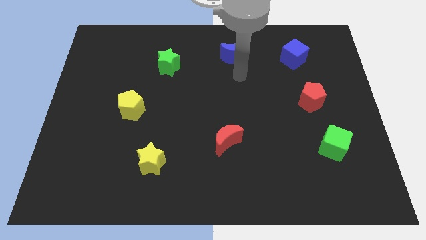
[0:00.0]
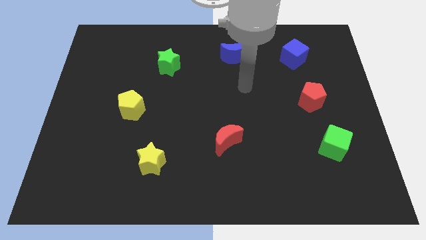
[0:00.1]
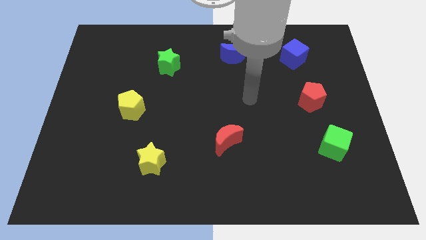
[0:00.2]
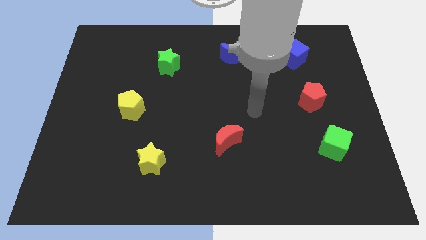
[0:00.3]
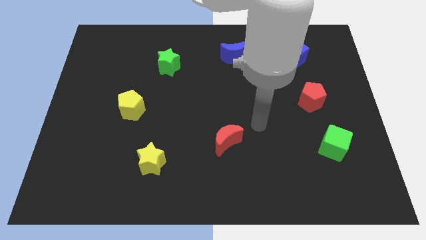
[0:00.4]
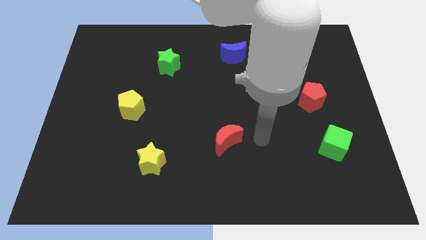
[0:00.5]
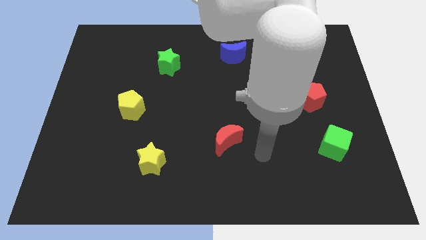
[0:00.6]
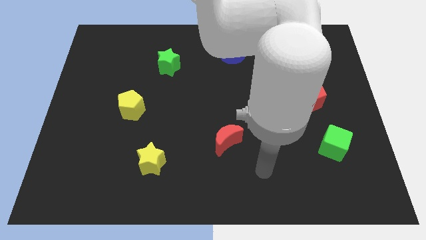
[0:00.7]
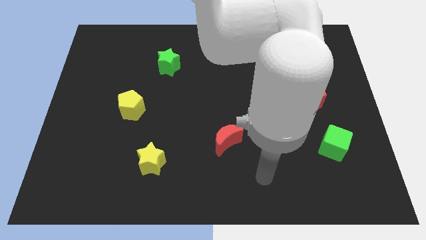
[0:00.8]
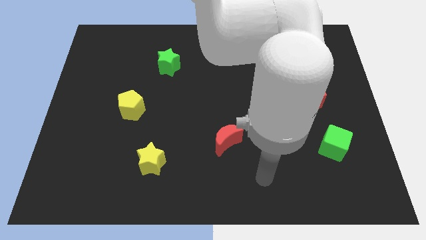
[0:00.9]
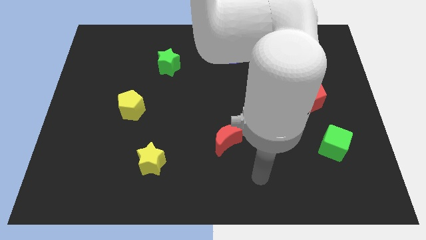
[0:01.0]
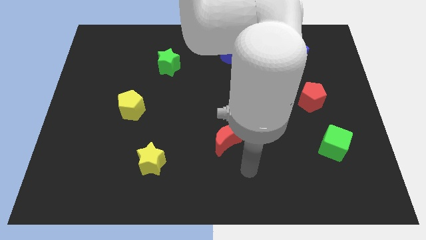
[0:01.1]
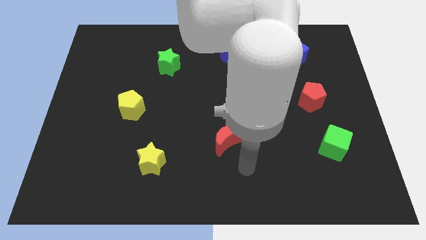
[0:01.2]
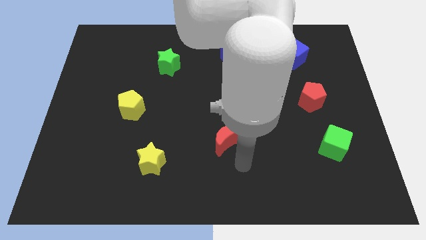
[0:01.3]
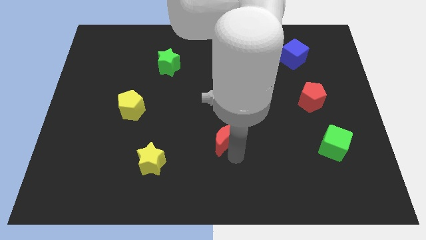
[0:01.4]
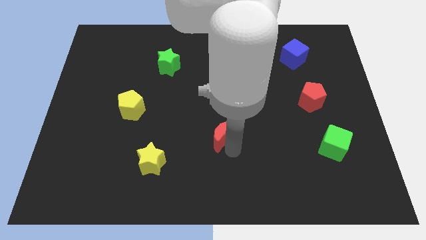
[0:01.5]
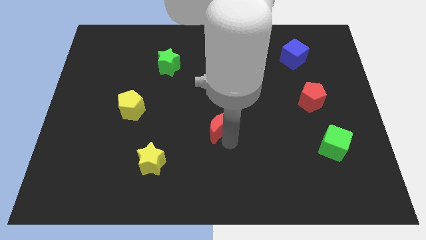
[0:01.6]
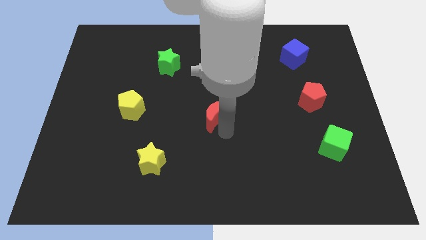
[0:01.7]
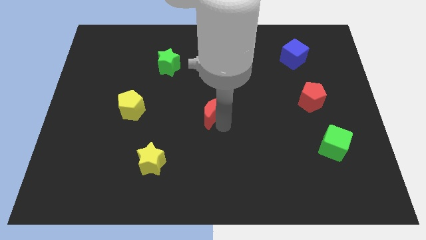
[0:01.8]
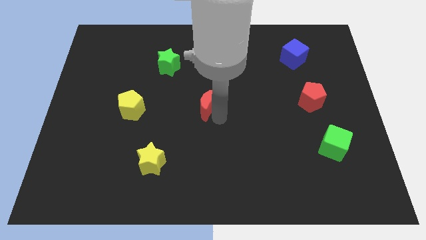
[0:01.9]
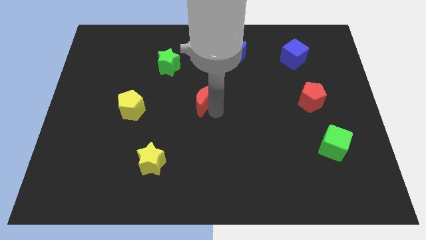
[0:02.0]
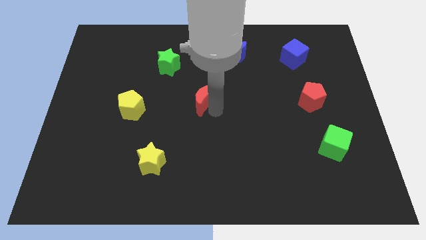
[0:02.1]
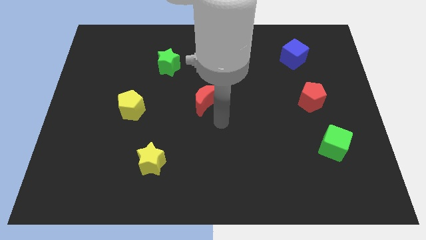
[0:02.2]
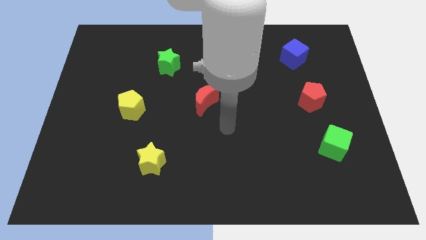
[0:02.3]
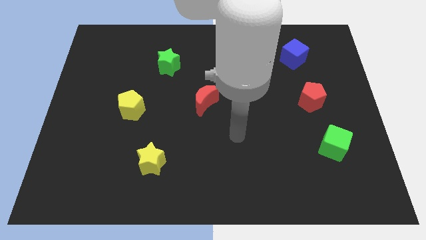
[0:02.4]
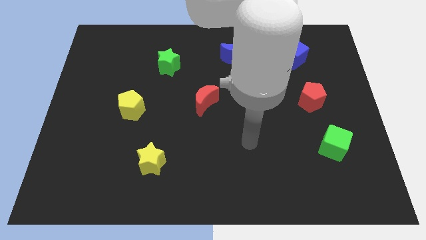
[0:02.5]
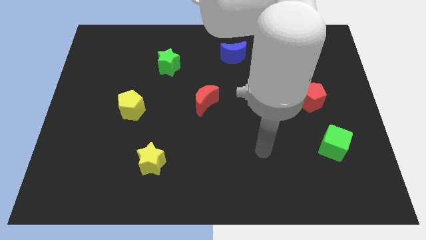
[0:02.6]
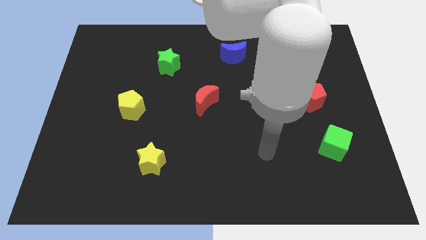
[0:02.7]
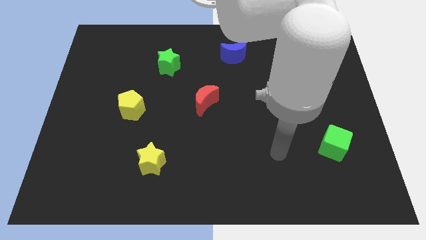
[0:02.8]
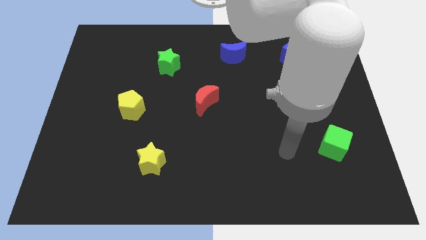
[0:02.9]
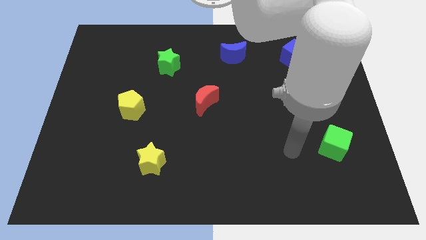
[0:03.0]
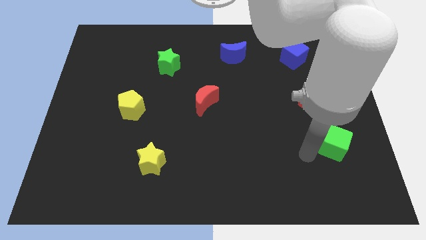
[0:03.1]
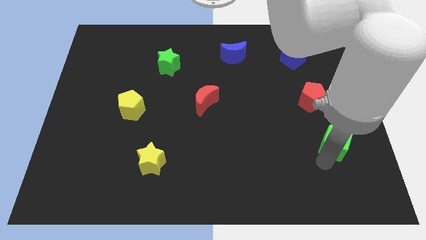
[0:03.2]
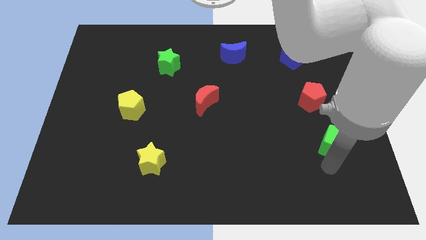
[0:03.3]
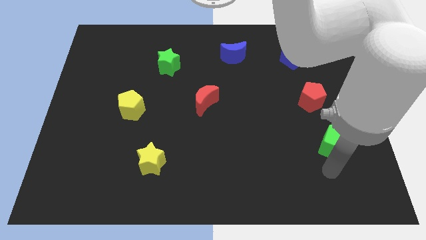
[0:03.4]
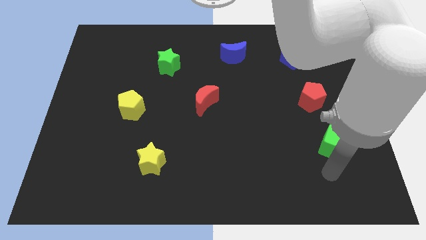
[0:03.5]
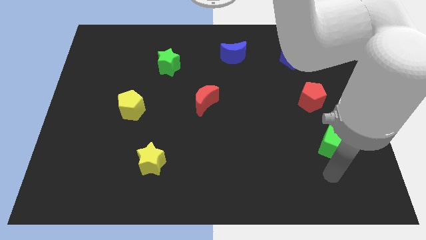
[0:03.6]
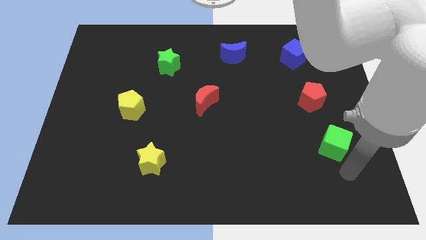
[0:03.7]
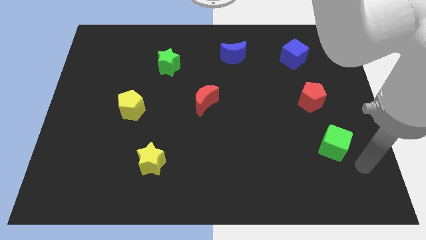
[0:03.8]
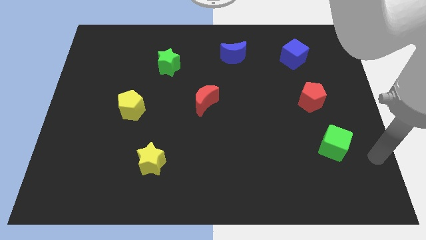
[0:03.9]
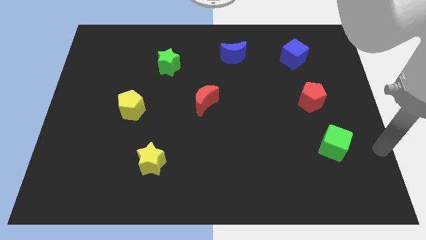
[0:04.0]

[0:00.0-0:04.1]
move red crescent in the center

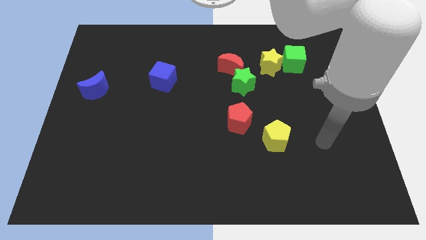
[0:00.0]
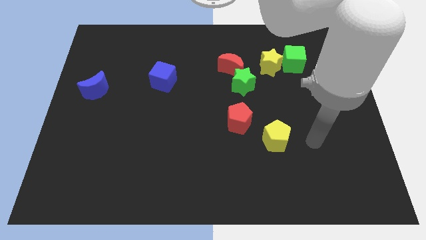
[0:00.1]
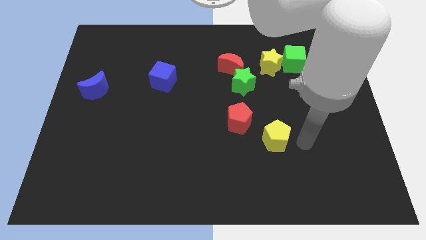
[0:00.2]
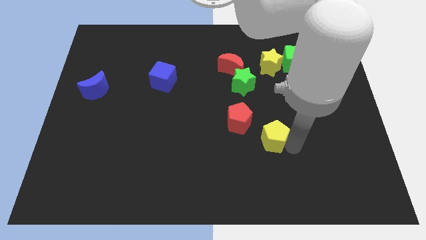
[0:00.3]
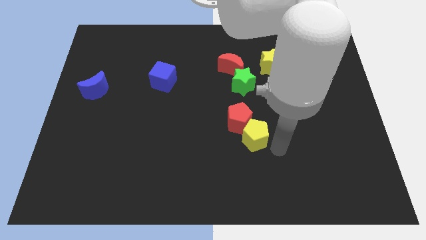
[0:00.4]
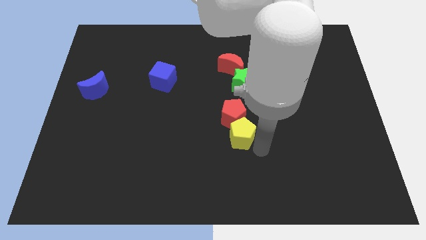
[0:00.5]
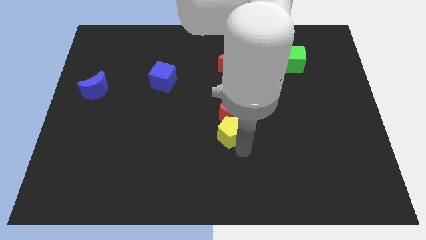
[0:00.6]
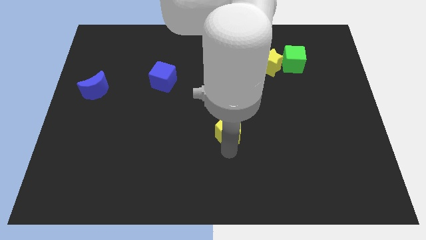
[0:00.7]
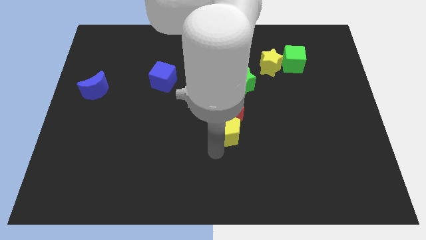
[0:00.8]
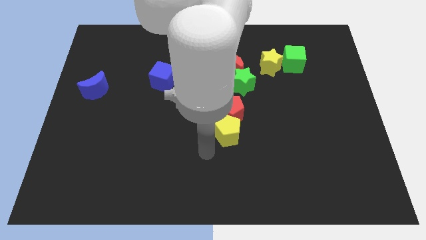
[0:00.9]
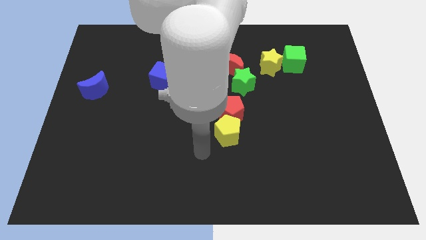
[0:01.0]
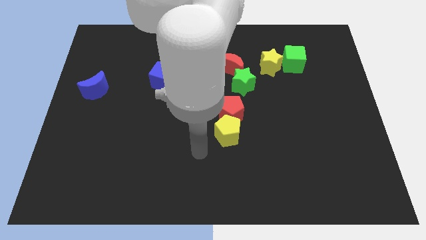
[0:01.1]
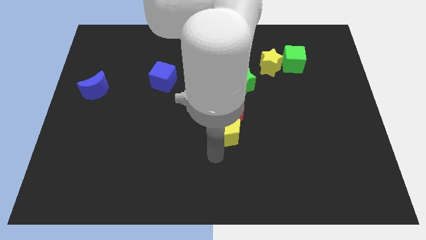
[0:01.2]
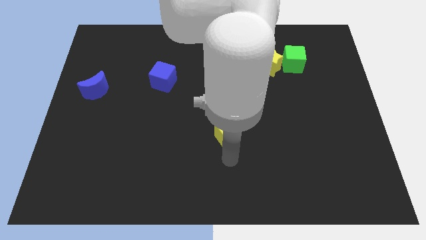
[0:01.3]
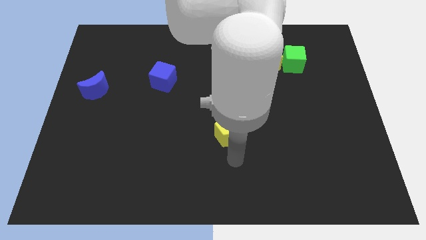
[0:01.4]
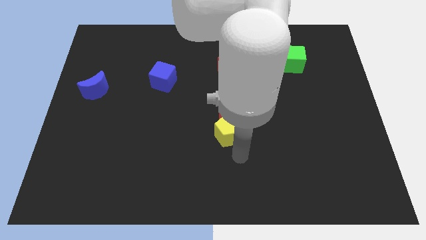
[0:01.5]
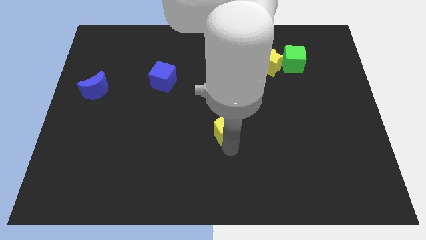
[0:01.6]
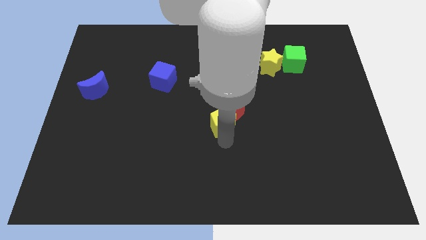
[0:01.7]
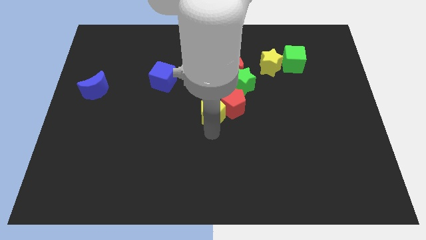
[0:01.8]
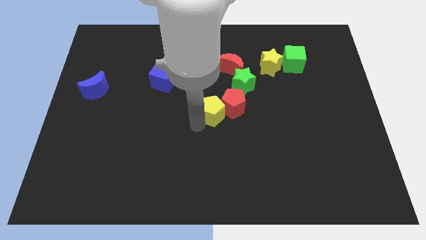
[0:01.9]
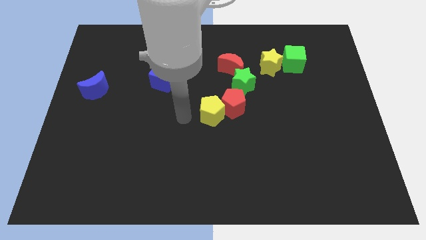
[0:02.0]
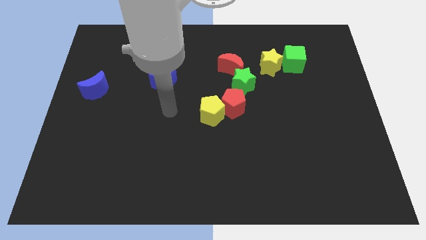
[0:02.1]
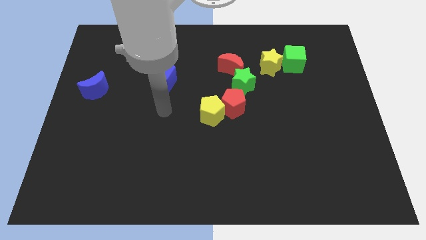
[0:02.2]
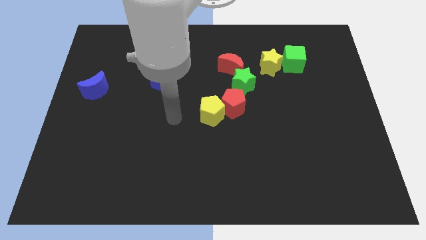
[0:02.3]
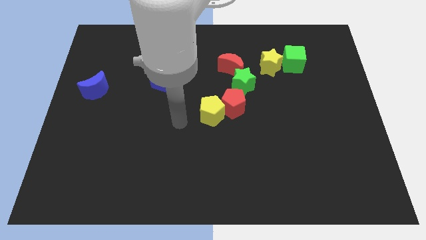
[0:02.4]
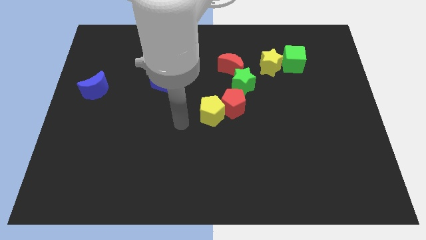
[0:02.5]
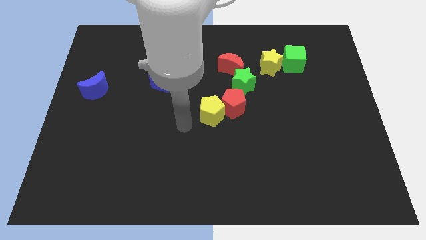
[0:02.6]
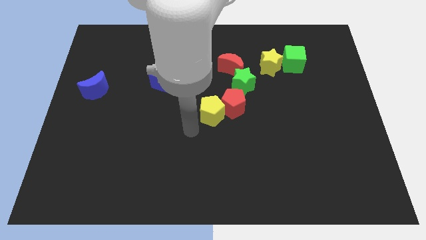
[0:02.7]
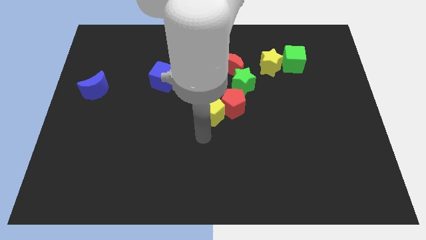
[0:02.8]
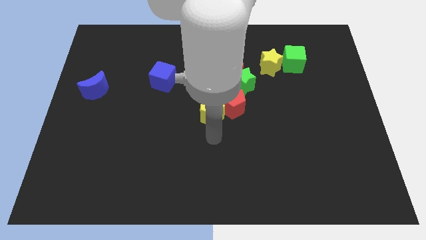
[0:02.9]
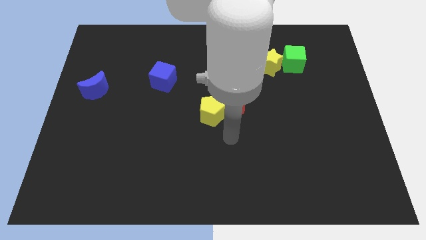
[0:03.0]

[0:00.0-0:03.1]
push the yellow pentagon to the left of the red pentagon

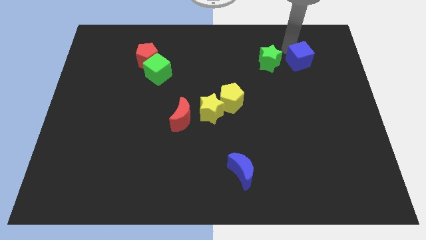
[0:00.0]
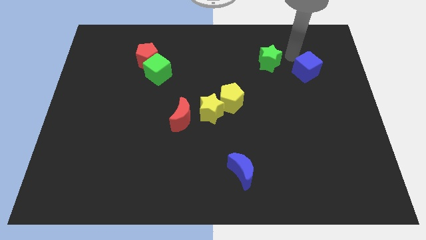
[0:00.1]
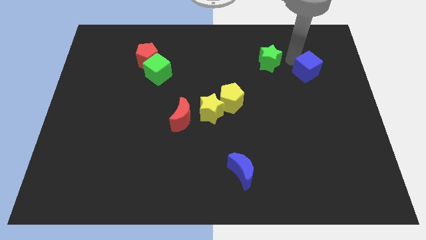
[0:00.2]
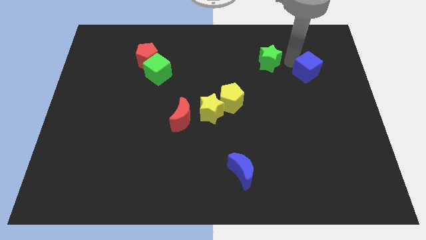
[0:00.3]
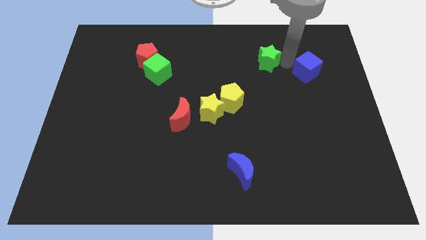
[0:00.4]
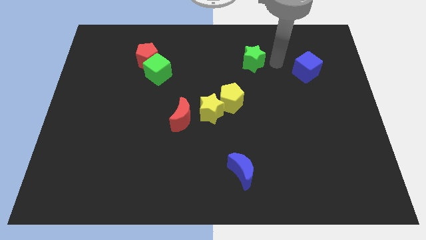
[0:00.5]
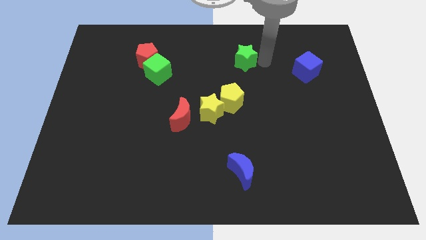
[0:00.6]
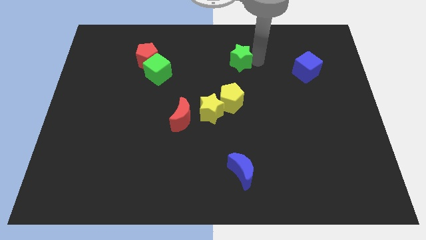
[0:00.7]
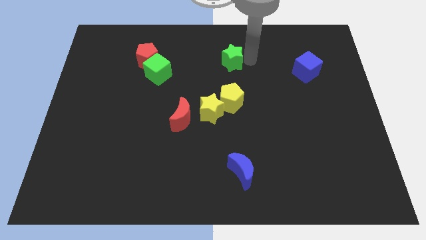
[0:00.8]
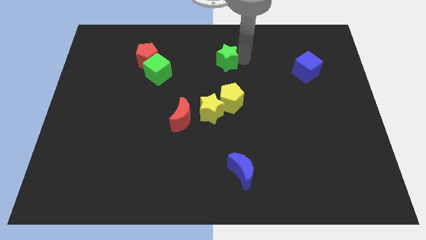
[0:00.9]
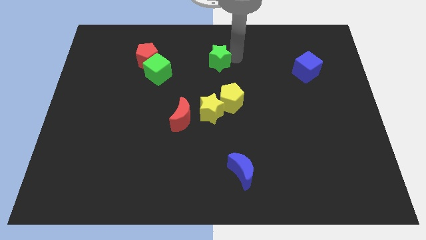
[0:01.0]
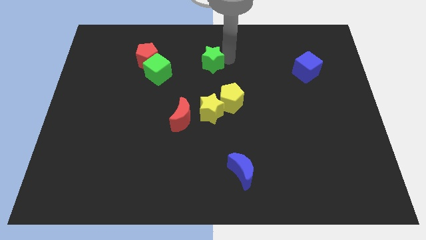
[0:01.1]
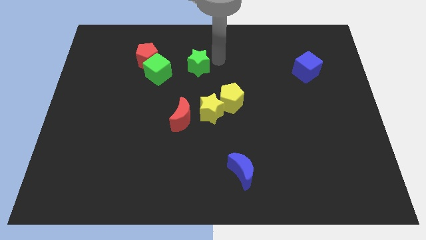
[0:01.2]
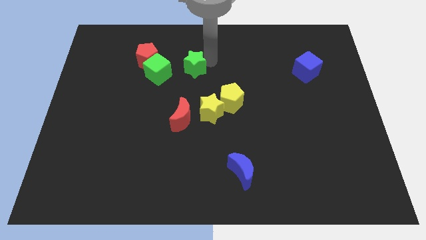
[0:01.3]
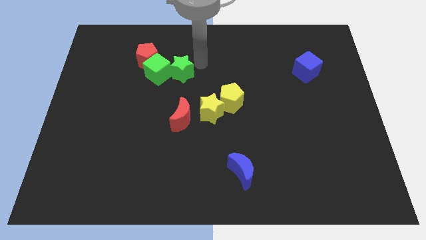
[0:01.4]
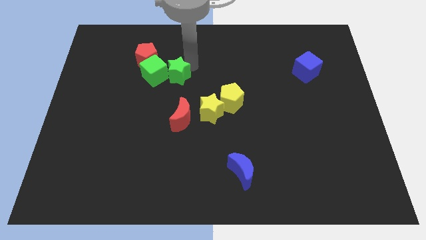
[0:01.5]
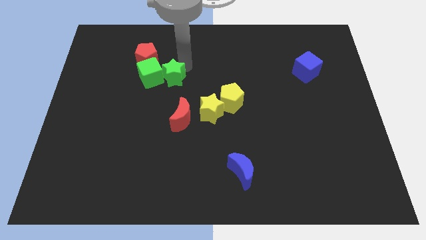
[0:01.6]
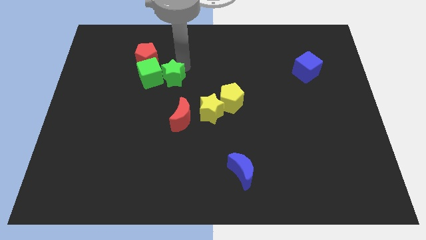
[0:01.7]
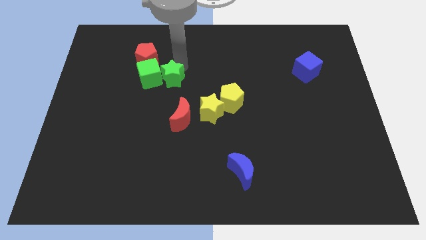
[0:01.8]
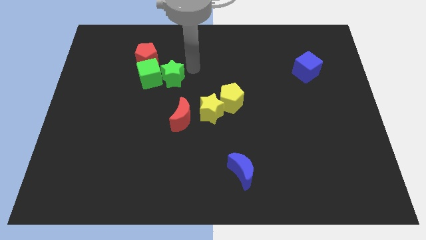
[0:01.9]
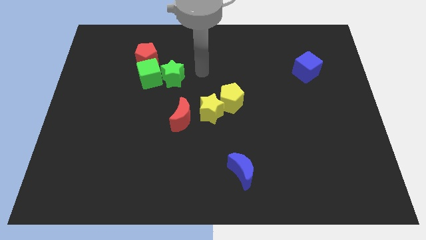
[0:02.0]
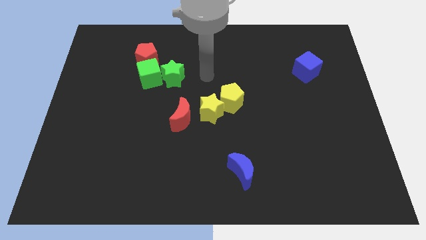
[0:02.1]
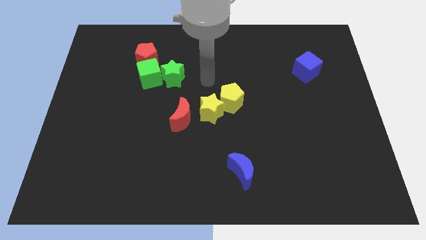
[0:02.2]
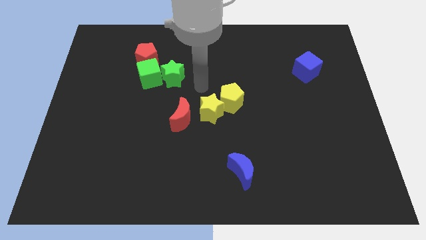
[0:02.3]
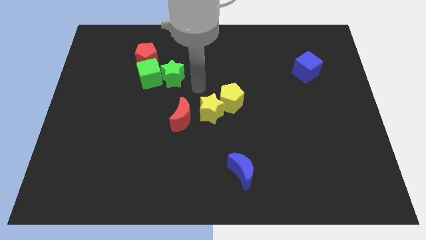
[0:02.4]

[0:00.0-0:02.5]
push the green star into the green cube
